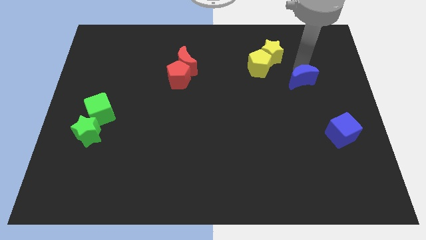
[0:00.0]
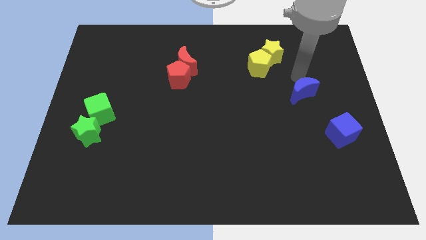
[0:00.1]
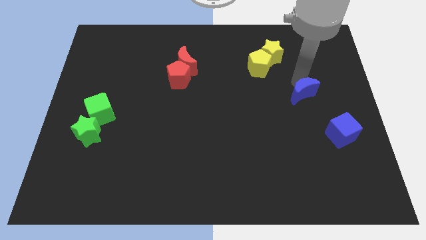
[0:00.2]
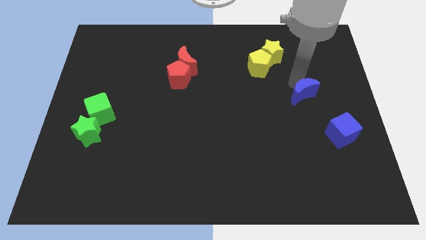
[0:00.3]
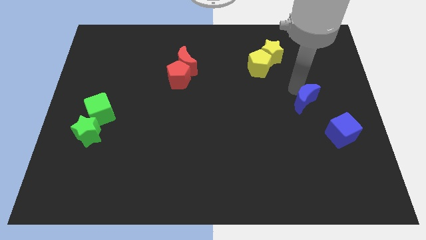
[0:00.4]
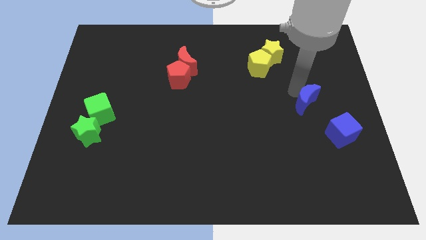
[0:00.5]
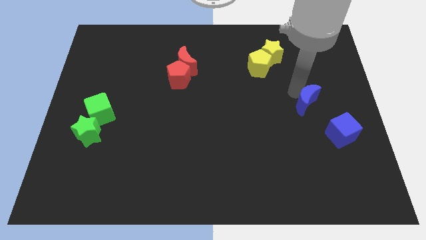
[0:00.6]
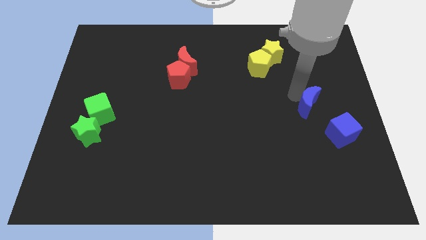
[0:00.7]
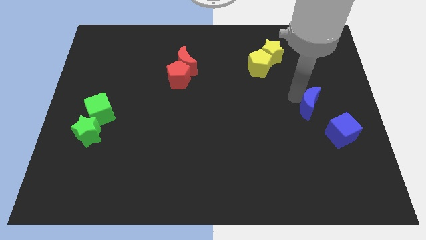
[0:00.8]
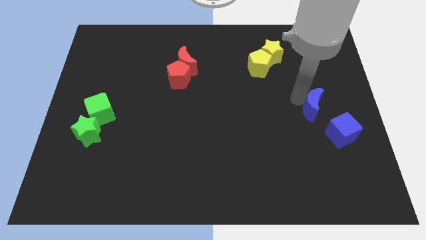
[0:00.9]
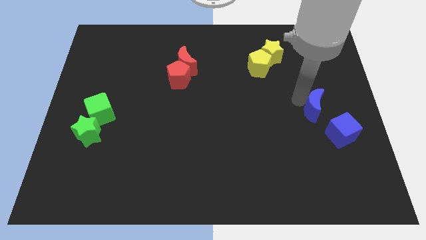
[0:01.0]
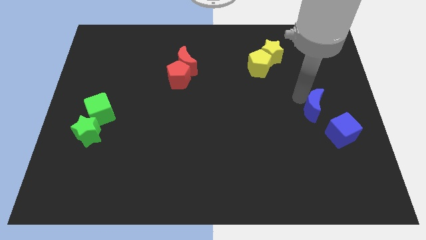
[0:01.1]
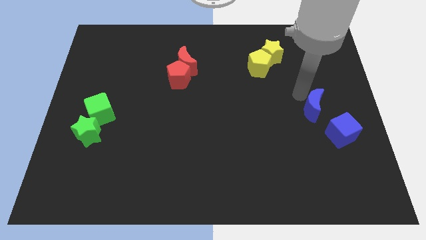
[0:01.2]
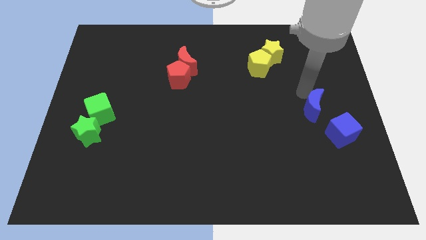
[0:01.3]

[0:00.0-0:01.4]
push the blue cube slightly downwards

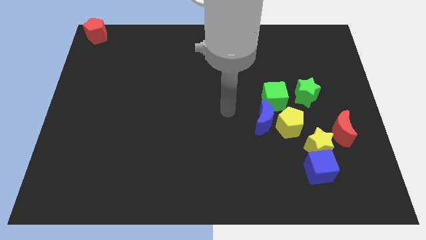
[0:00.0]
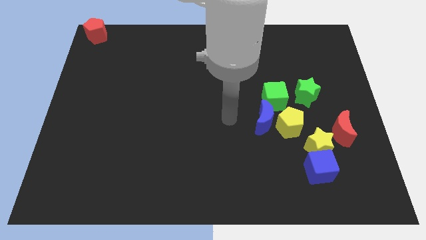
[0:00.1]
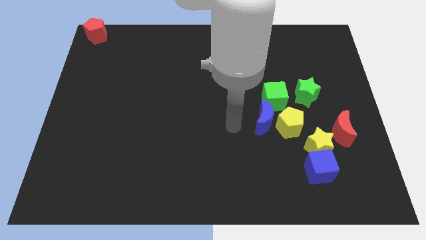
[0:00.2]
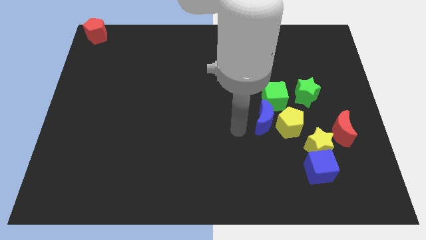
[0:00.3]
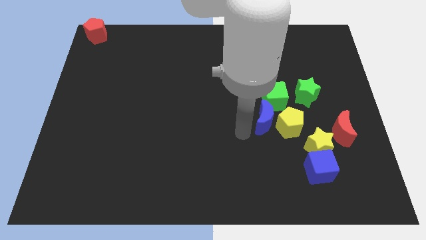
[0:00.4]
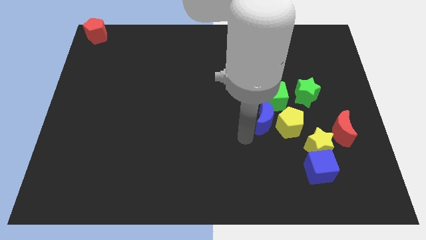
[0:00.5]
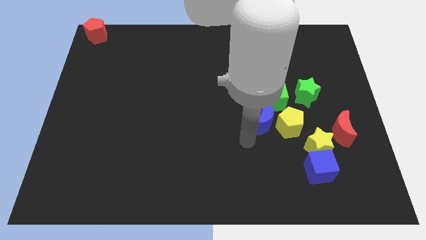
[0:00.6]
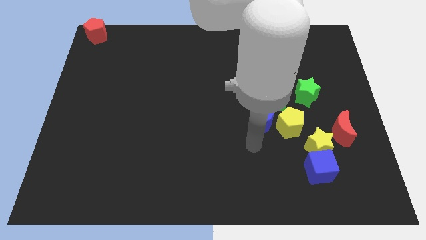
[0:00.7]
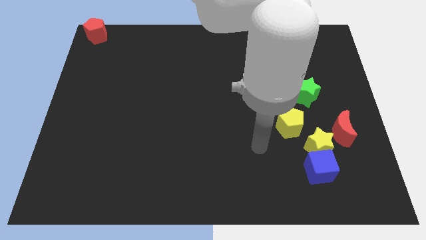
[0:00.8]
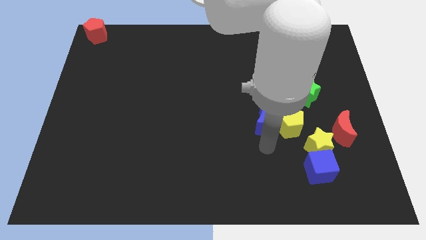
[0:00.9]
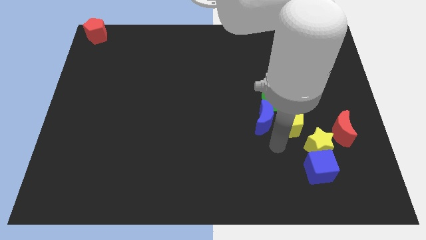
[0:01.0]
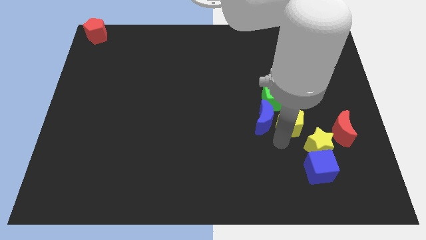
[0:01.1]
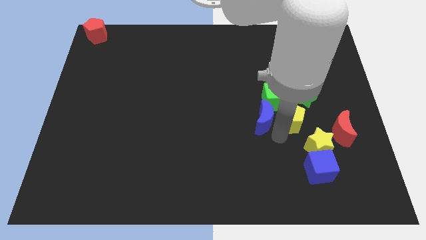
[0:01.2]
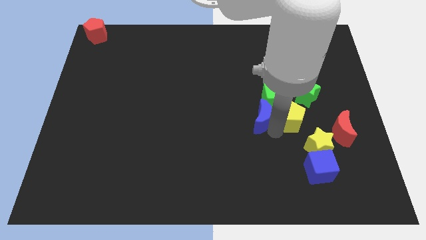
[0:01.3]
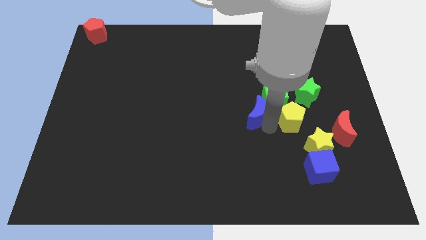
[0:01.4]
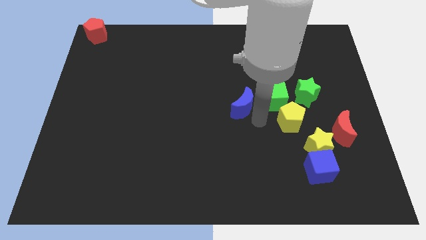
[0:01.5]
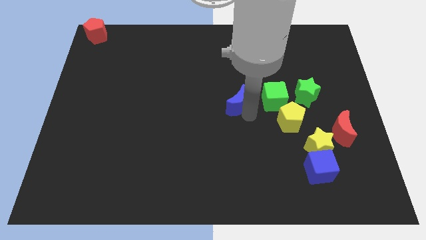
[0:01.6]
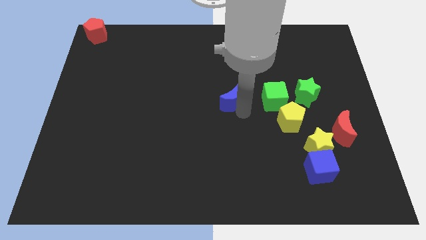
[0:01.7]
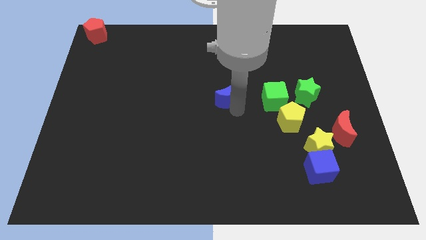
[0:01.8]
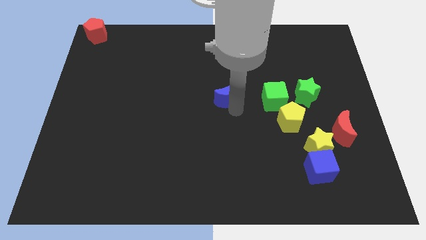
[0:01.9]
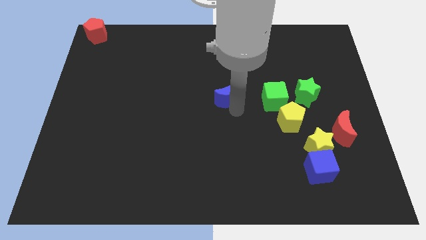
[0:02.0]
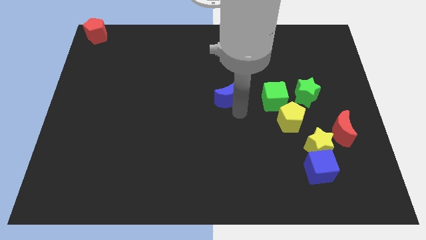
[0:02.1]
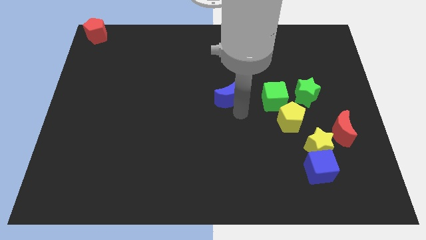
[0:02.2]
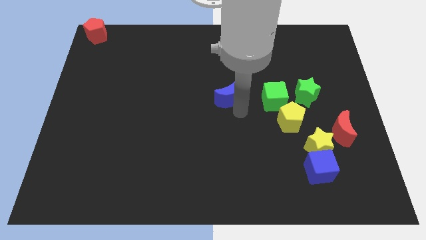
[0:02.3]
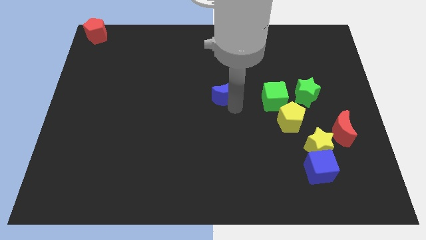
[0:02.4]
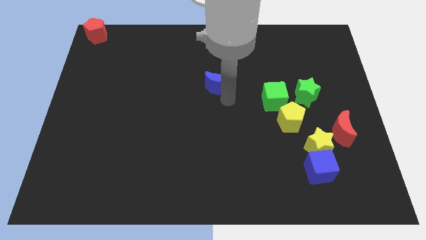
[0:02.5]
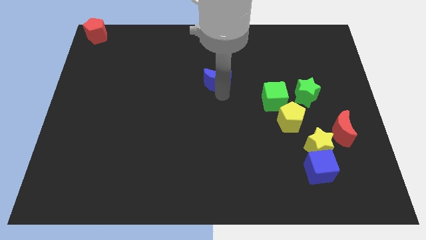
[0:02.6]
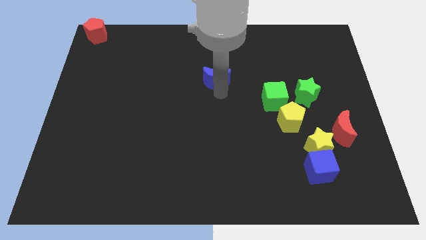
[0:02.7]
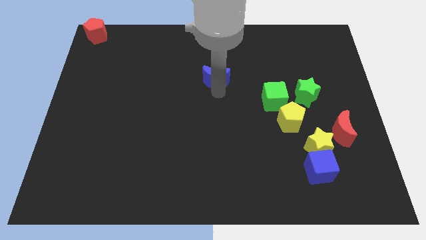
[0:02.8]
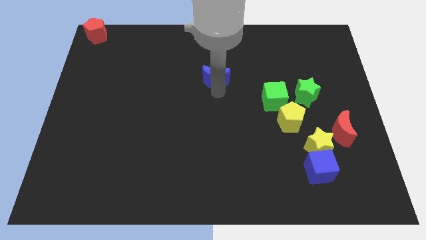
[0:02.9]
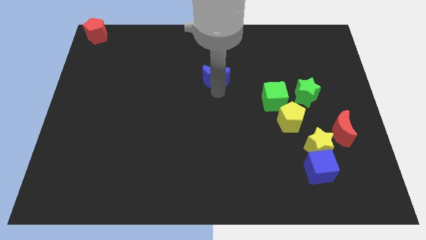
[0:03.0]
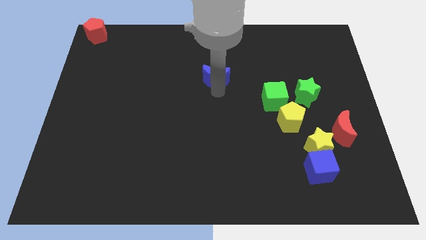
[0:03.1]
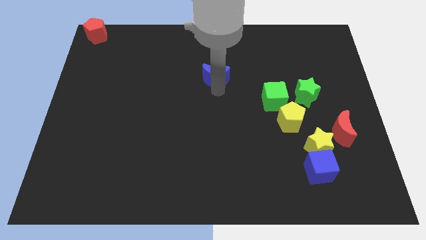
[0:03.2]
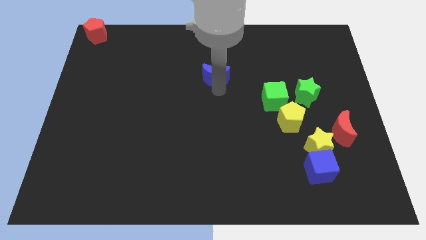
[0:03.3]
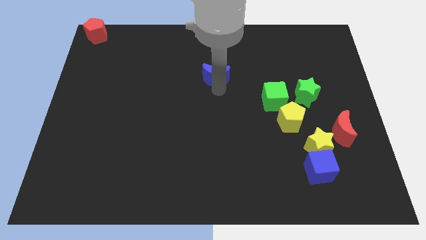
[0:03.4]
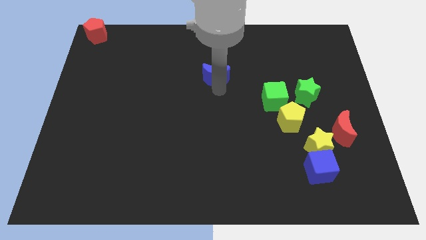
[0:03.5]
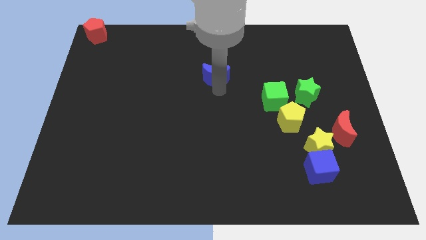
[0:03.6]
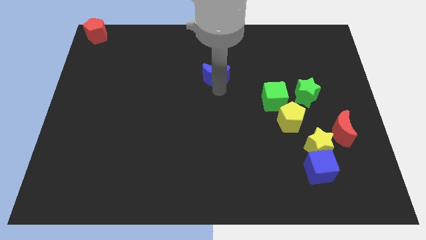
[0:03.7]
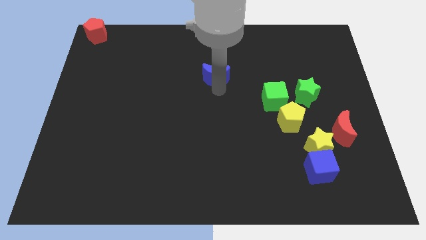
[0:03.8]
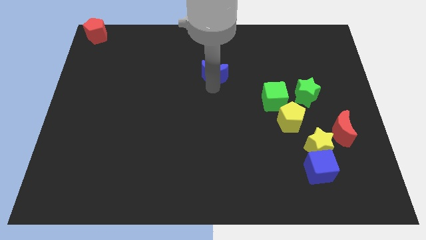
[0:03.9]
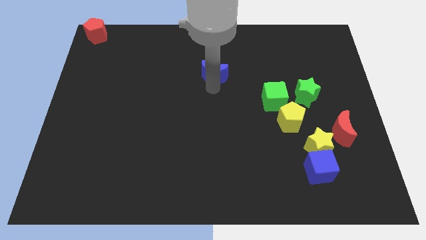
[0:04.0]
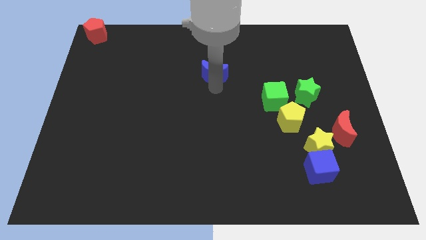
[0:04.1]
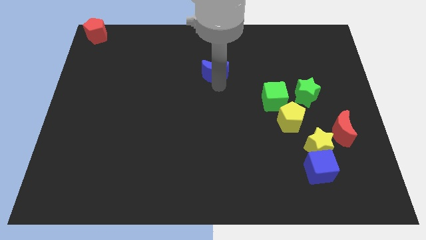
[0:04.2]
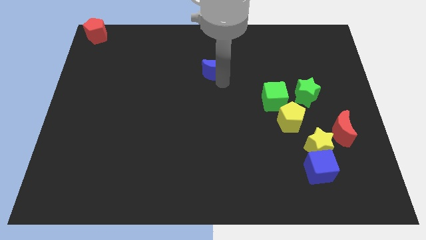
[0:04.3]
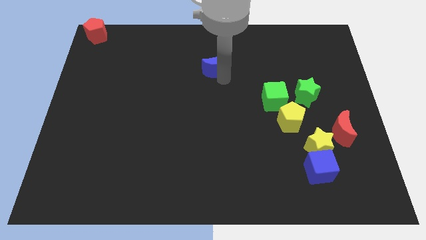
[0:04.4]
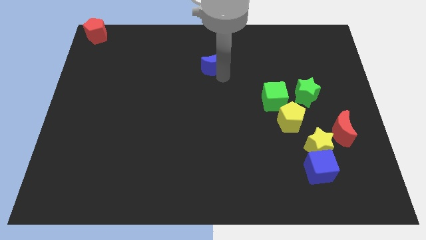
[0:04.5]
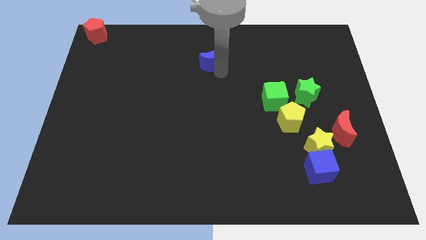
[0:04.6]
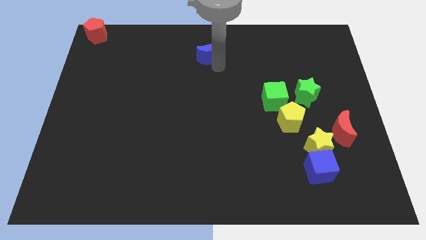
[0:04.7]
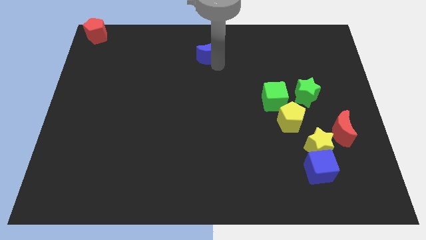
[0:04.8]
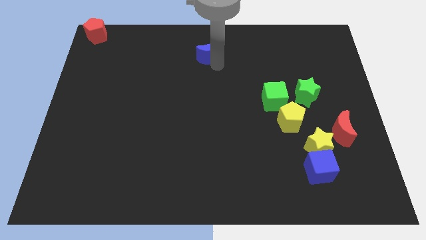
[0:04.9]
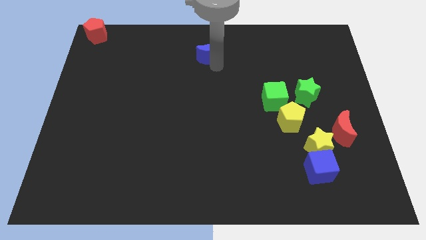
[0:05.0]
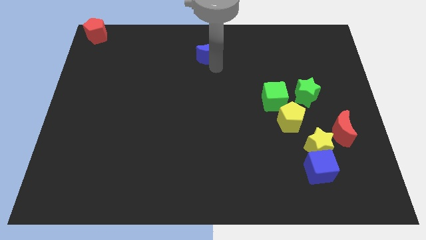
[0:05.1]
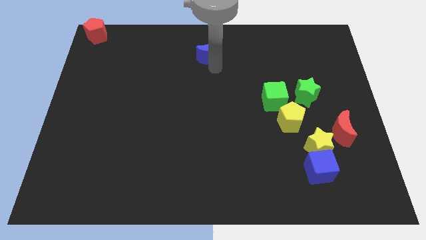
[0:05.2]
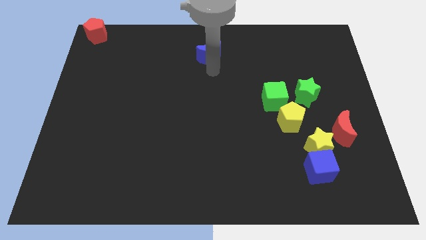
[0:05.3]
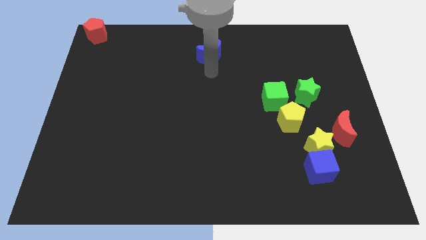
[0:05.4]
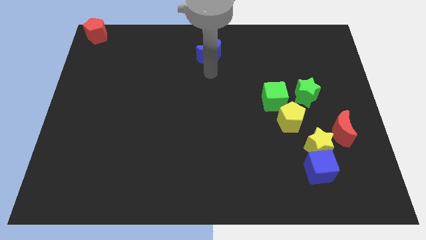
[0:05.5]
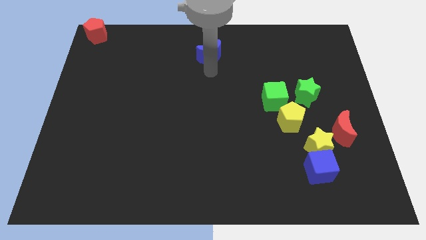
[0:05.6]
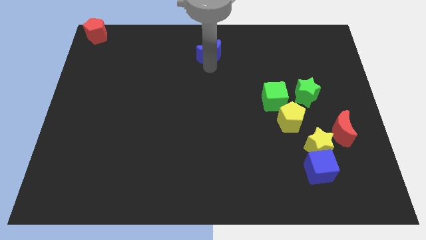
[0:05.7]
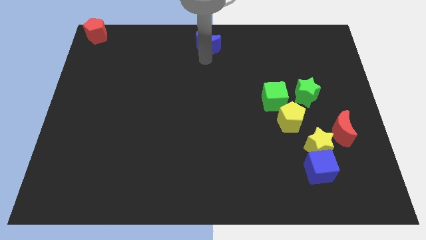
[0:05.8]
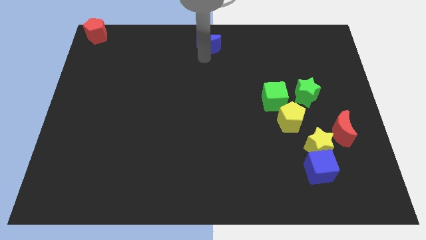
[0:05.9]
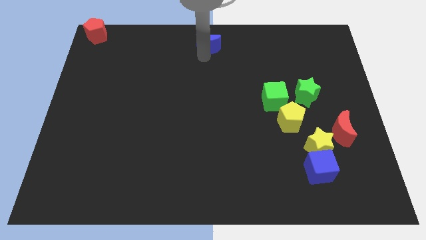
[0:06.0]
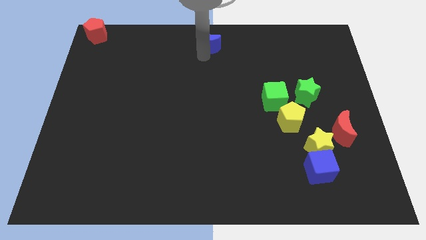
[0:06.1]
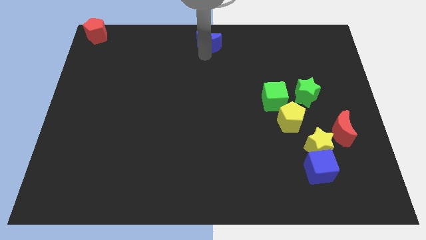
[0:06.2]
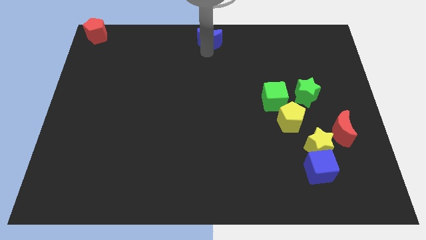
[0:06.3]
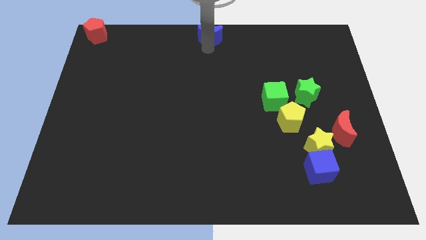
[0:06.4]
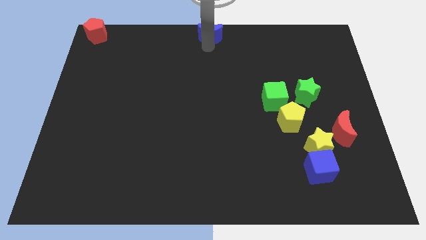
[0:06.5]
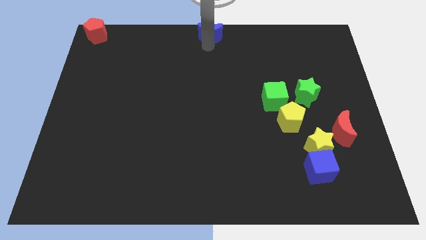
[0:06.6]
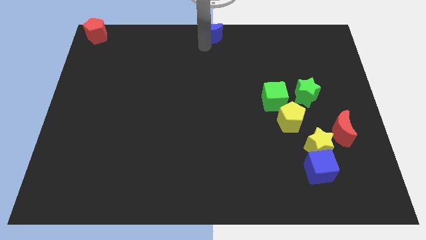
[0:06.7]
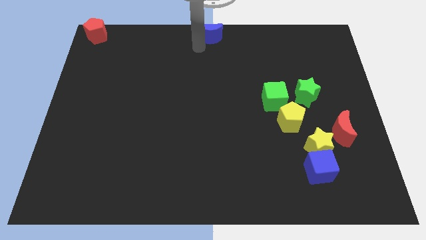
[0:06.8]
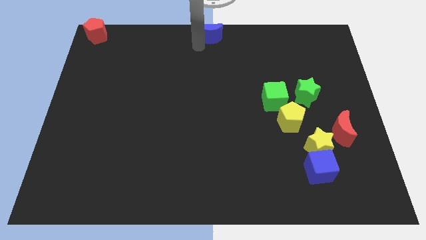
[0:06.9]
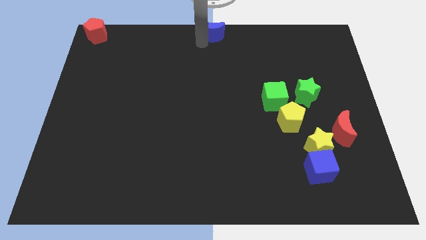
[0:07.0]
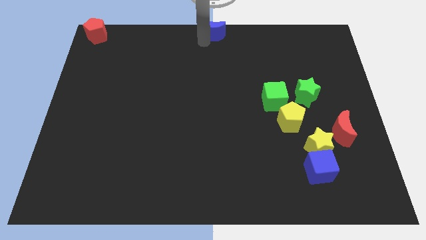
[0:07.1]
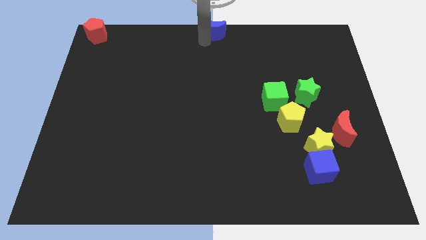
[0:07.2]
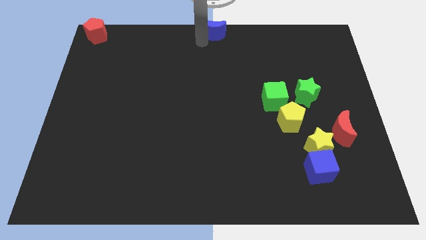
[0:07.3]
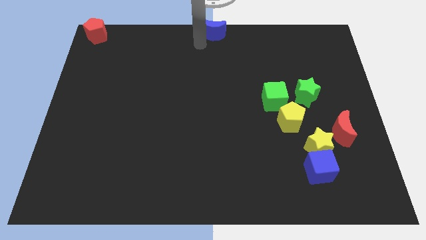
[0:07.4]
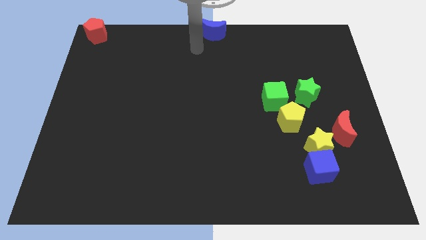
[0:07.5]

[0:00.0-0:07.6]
push the blue moon to the top center of the board
